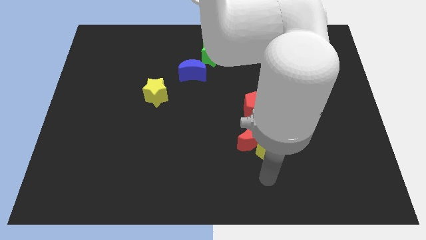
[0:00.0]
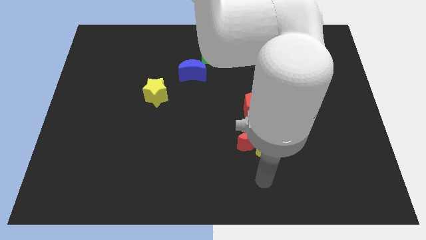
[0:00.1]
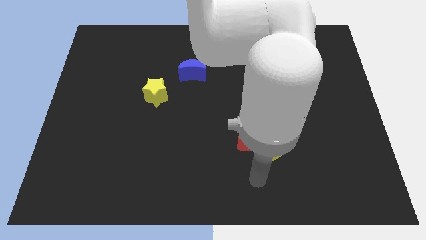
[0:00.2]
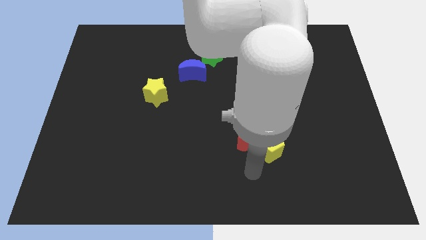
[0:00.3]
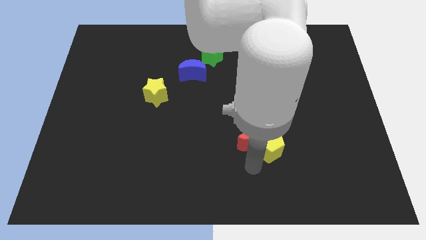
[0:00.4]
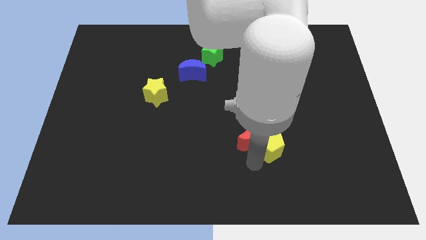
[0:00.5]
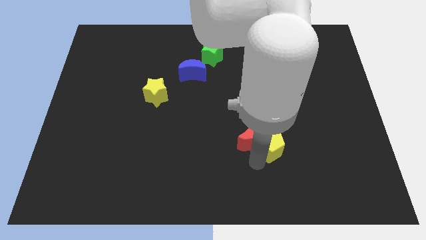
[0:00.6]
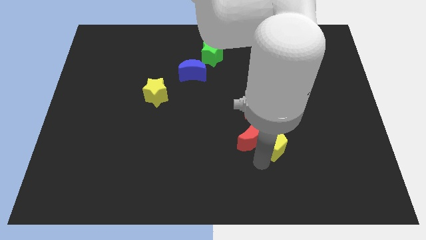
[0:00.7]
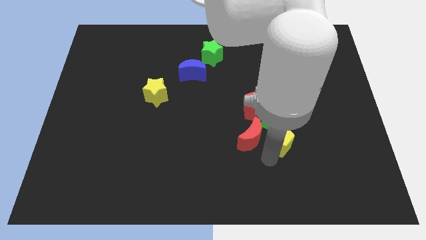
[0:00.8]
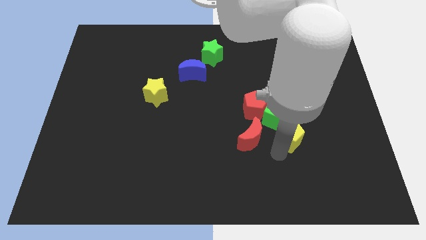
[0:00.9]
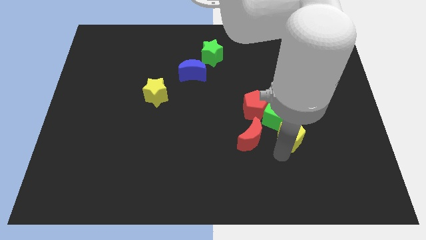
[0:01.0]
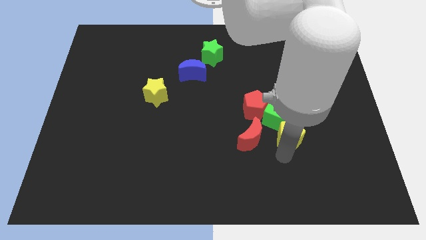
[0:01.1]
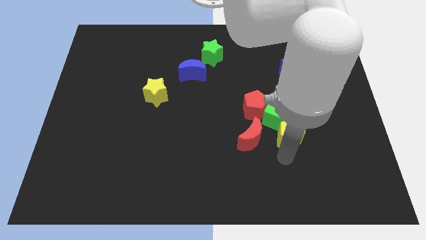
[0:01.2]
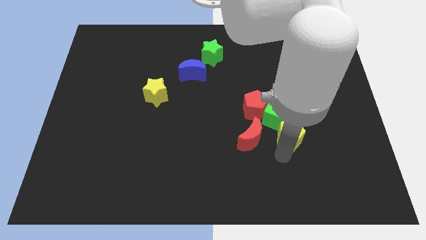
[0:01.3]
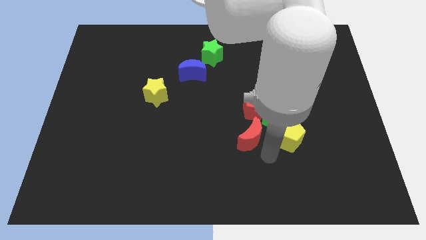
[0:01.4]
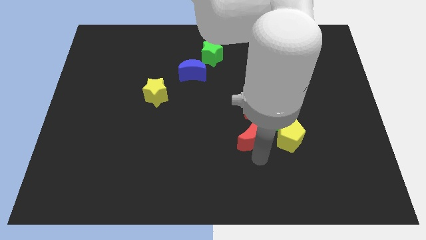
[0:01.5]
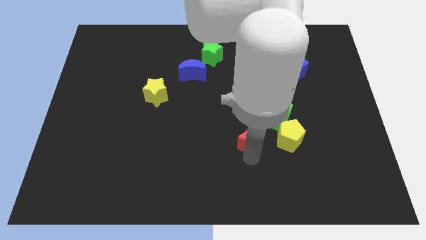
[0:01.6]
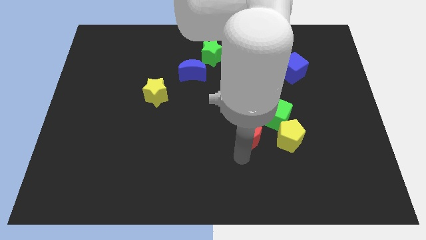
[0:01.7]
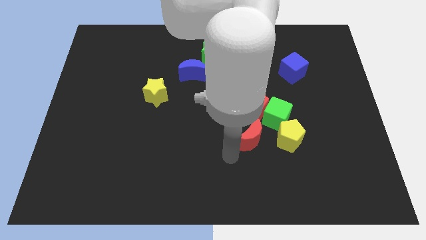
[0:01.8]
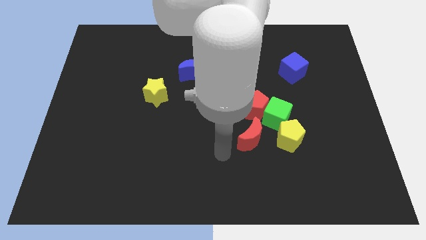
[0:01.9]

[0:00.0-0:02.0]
place the yellow pentagon towards the bottom right side of the green cube

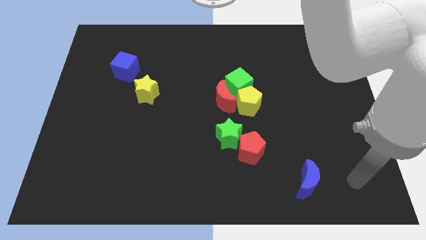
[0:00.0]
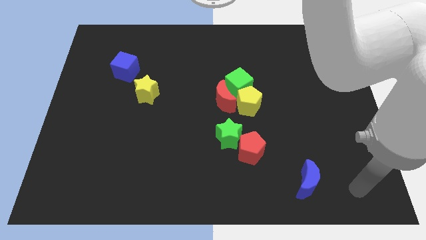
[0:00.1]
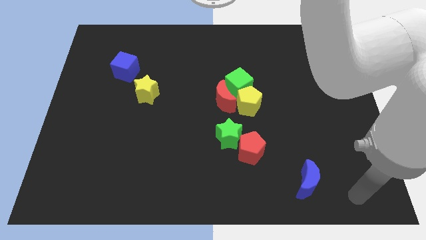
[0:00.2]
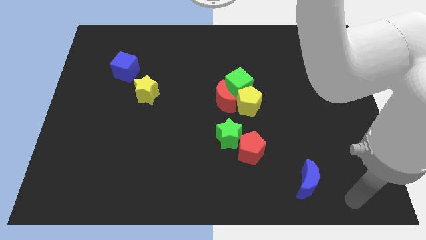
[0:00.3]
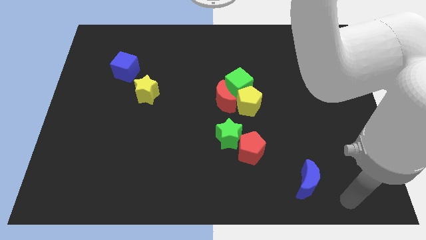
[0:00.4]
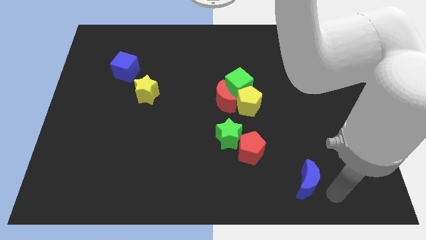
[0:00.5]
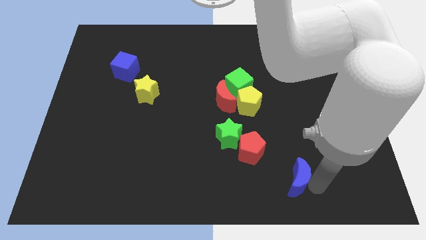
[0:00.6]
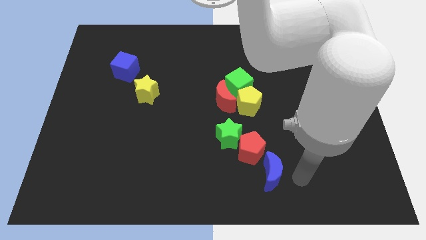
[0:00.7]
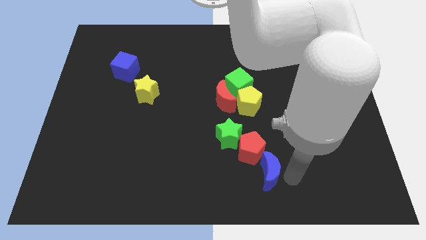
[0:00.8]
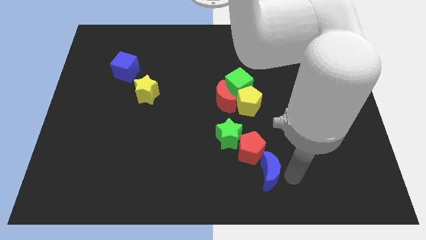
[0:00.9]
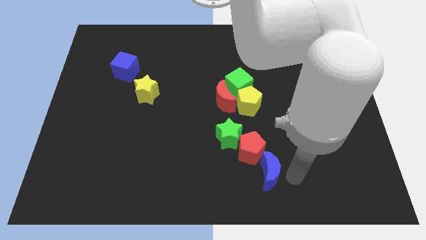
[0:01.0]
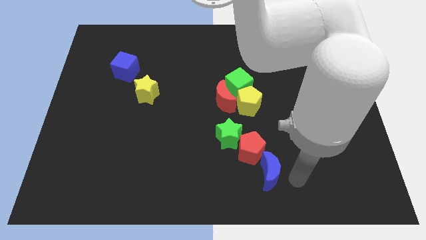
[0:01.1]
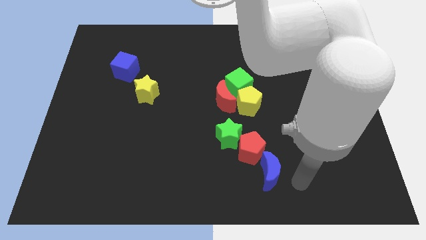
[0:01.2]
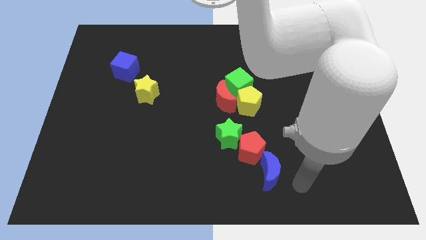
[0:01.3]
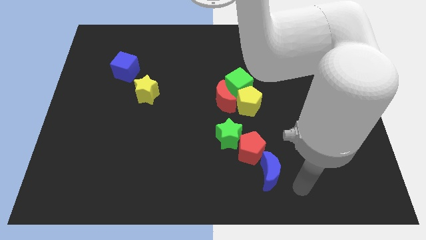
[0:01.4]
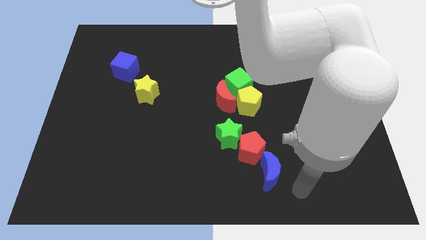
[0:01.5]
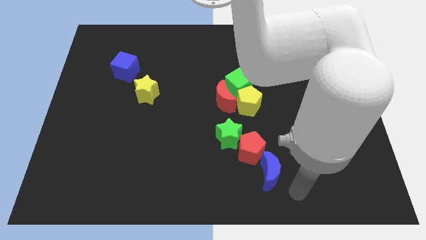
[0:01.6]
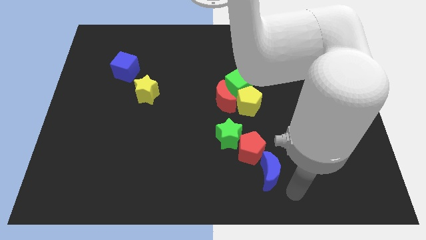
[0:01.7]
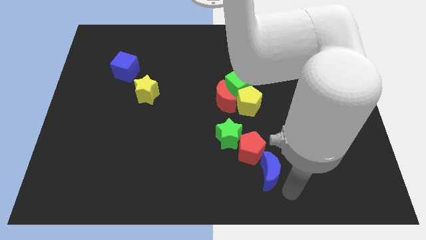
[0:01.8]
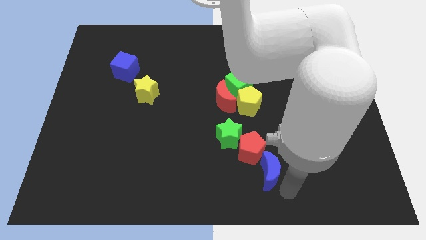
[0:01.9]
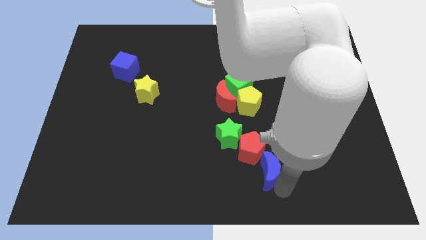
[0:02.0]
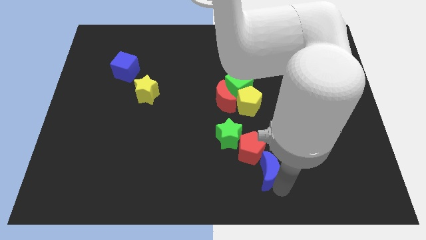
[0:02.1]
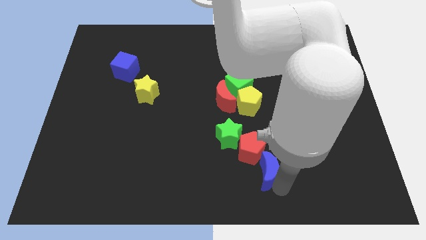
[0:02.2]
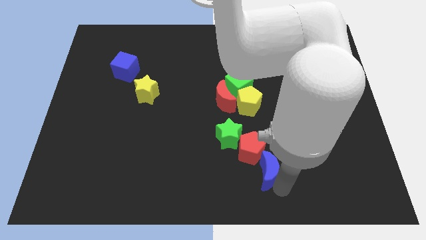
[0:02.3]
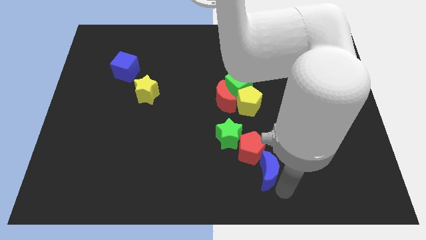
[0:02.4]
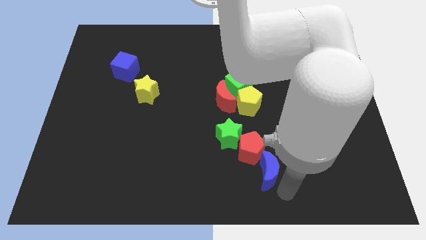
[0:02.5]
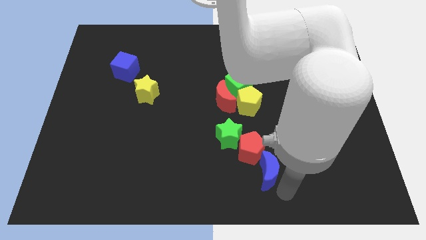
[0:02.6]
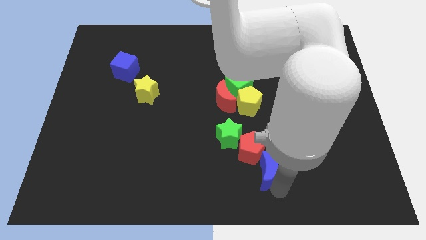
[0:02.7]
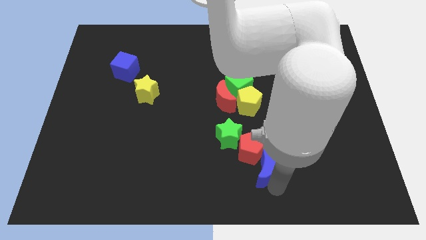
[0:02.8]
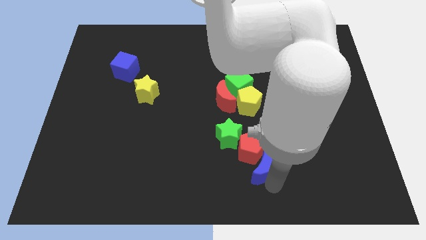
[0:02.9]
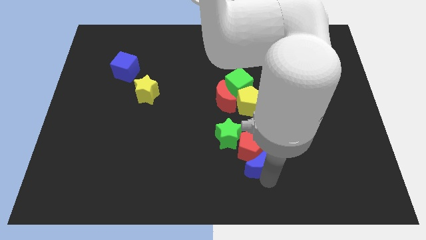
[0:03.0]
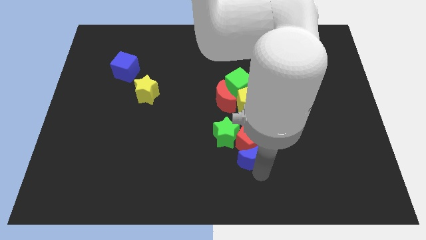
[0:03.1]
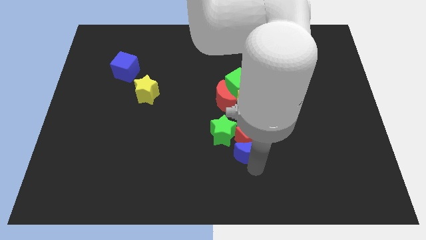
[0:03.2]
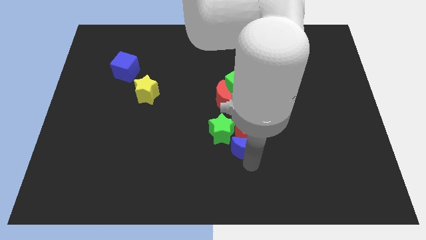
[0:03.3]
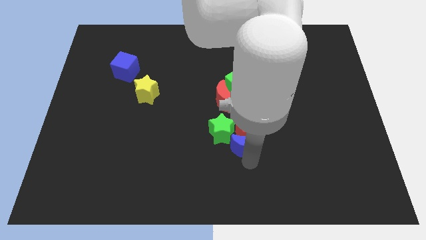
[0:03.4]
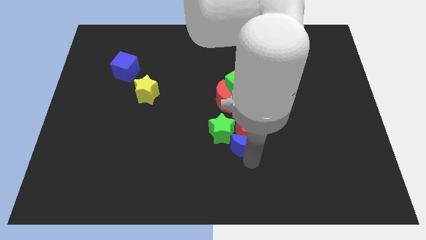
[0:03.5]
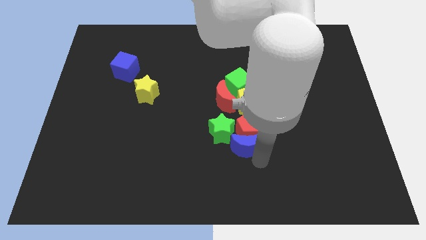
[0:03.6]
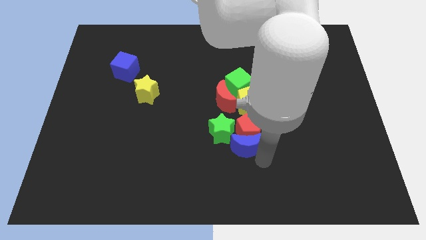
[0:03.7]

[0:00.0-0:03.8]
push red pentagon and blue crescent to the bottom of the yellow pentagon

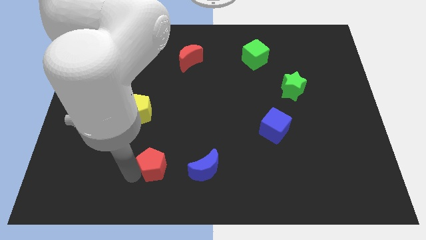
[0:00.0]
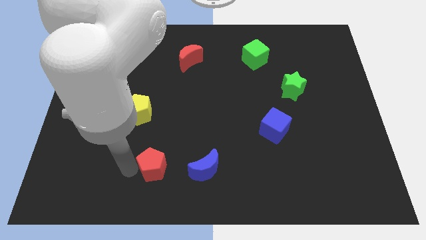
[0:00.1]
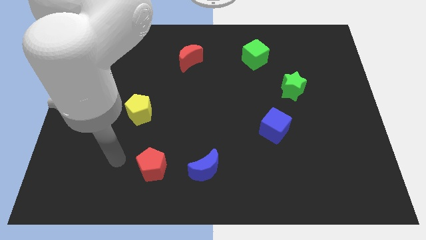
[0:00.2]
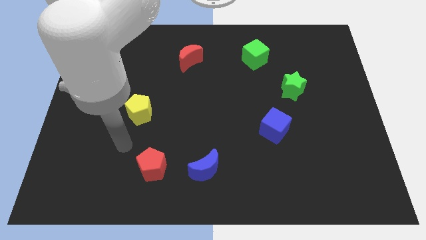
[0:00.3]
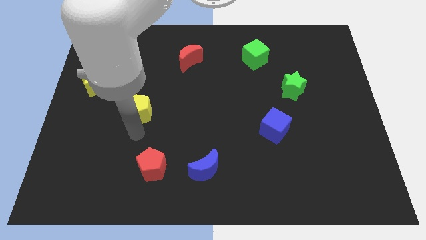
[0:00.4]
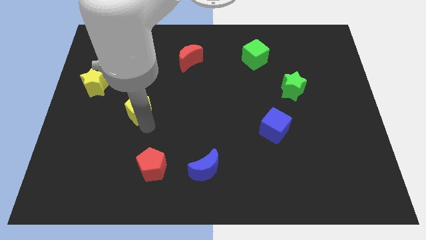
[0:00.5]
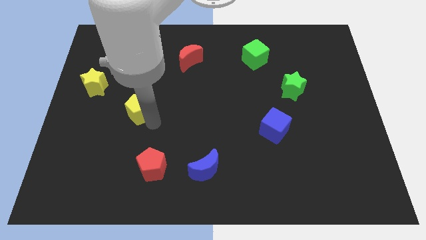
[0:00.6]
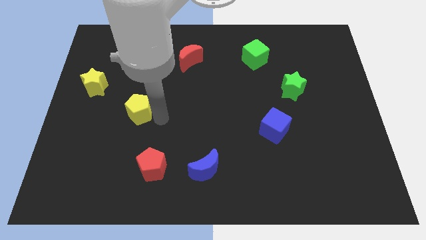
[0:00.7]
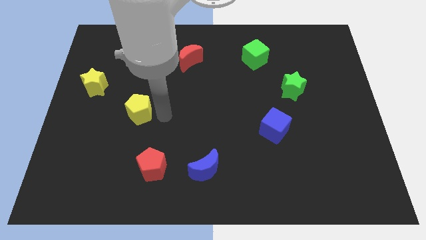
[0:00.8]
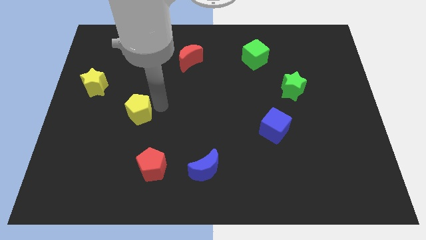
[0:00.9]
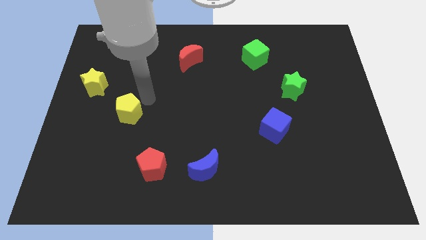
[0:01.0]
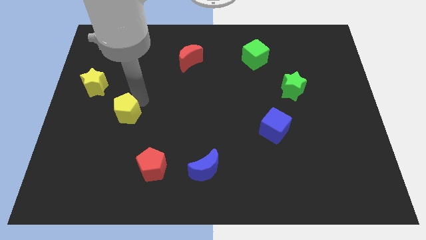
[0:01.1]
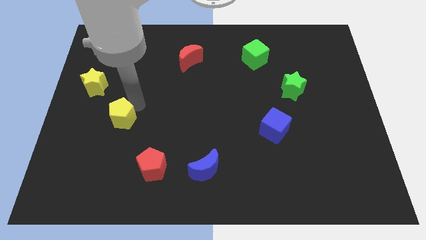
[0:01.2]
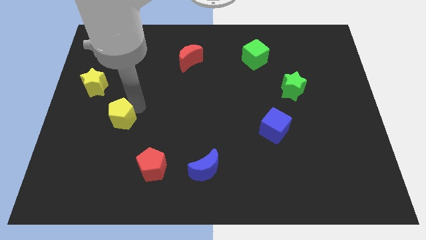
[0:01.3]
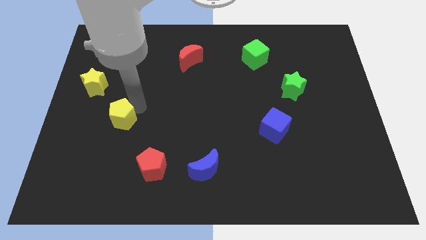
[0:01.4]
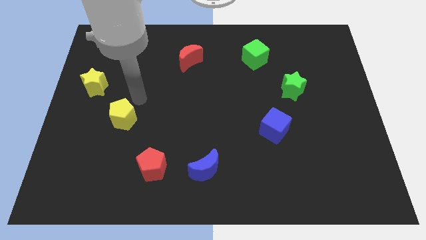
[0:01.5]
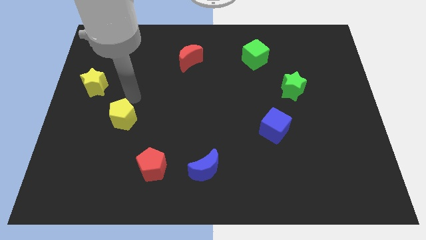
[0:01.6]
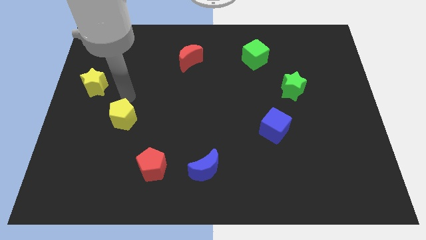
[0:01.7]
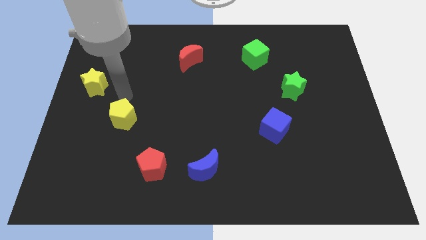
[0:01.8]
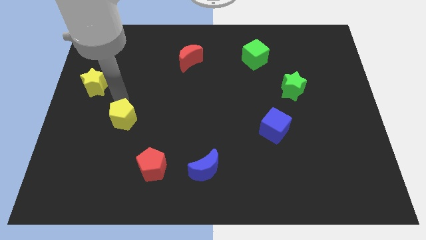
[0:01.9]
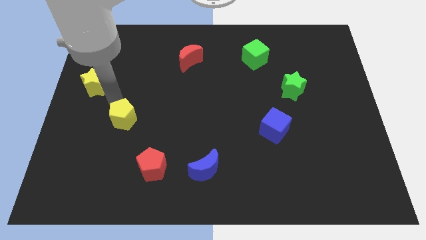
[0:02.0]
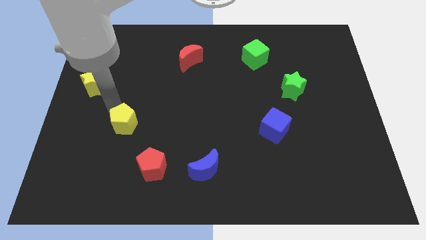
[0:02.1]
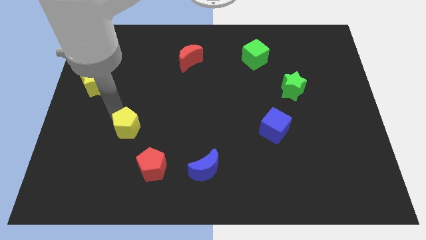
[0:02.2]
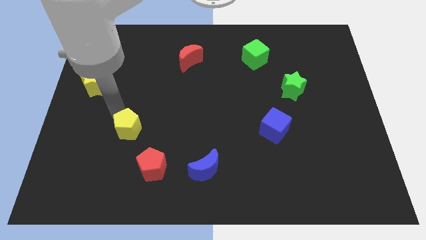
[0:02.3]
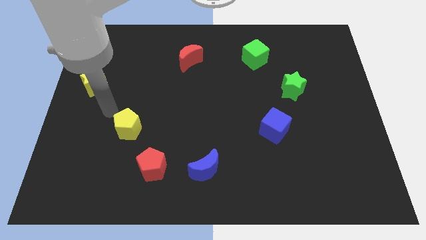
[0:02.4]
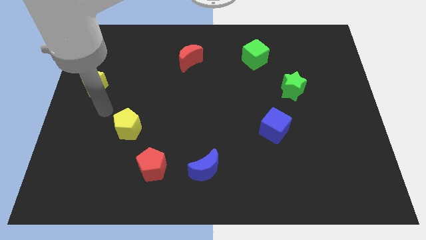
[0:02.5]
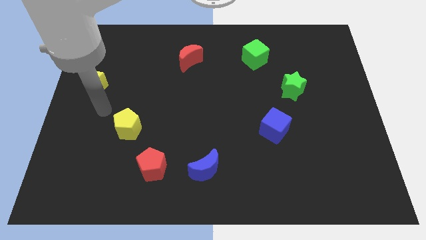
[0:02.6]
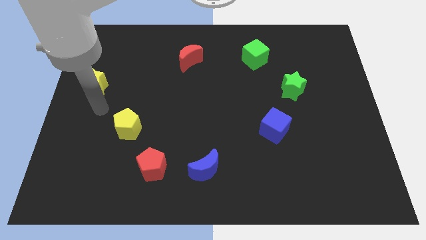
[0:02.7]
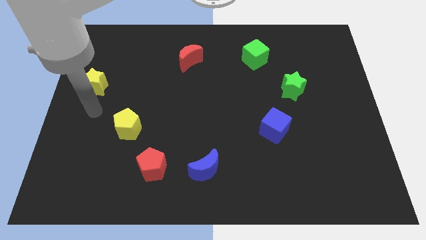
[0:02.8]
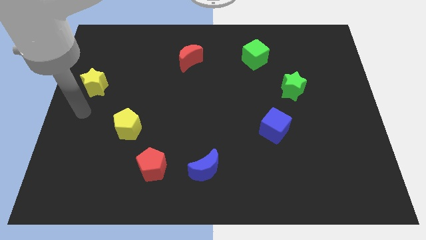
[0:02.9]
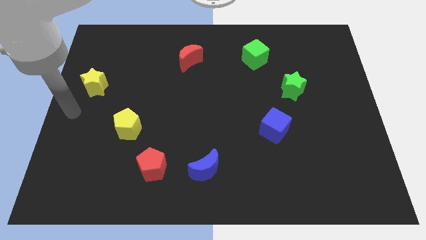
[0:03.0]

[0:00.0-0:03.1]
place the yellow pentagon in between the yellow star and red pentagon
